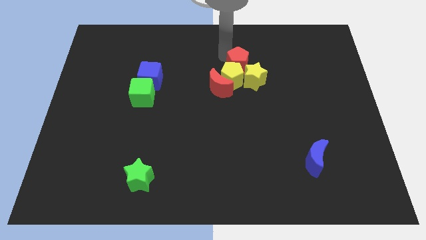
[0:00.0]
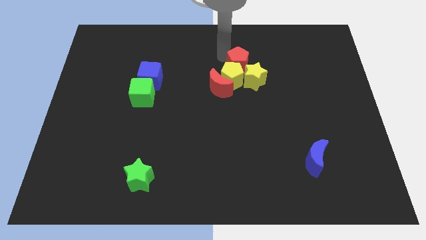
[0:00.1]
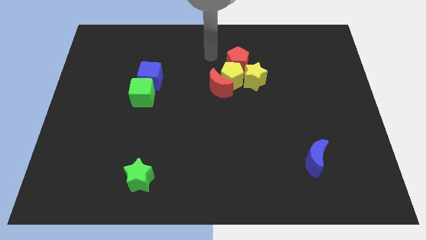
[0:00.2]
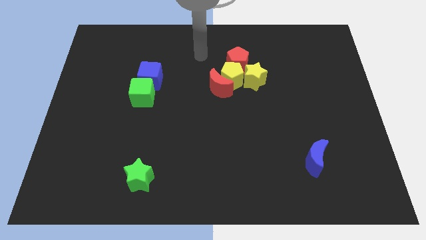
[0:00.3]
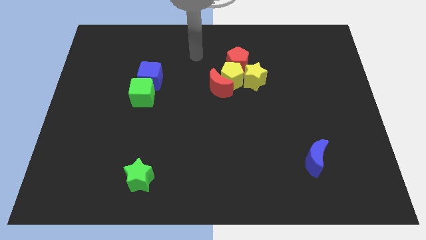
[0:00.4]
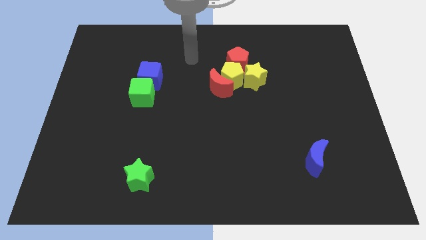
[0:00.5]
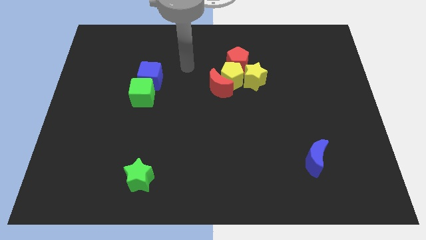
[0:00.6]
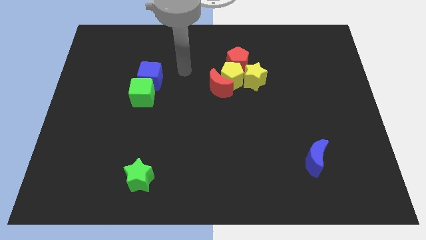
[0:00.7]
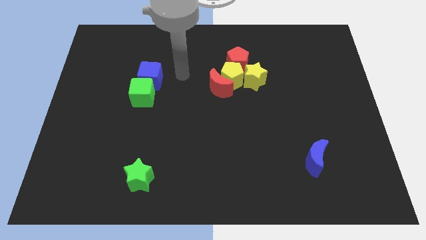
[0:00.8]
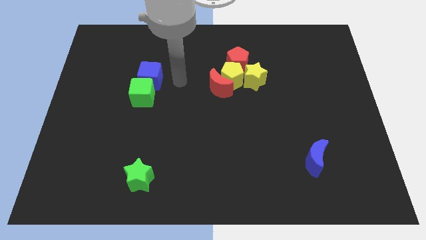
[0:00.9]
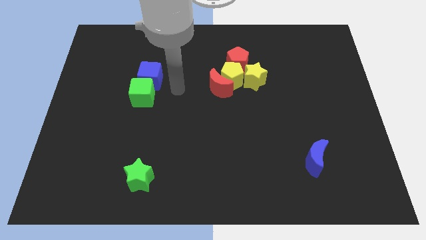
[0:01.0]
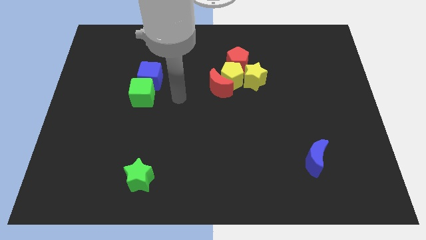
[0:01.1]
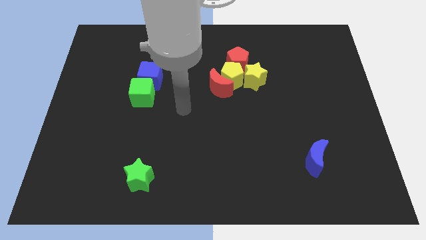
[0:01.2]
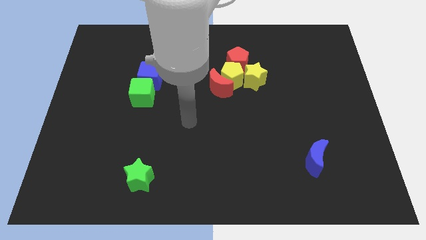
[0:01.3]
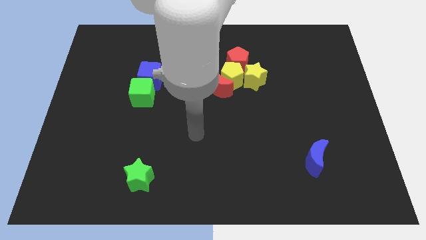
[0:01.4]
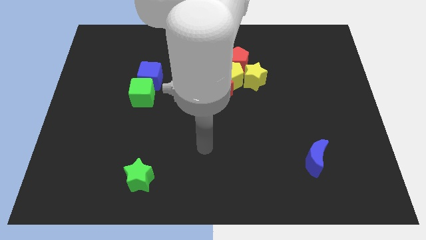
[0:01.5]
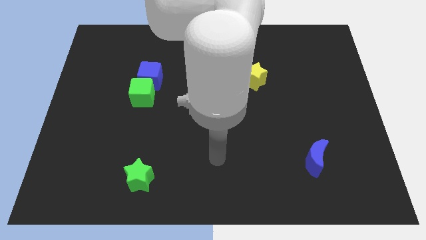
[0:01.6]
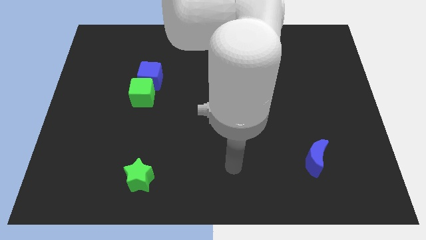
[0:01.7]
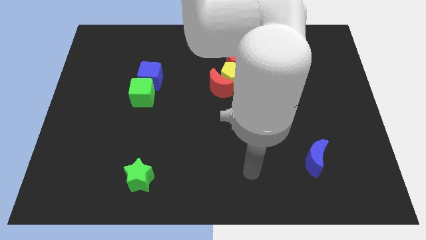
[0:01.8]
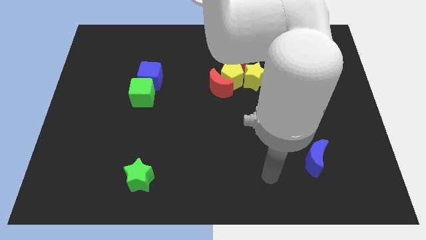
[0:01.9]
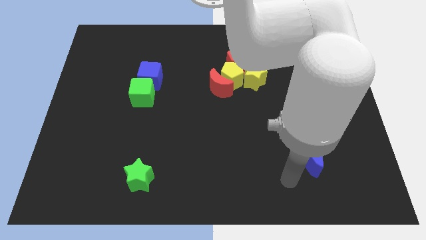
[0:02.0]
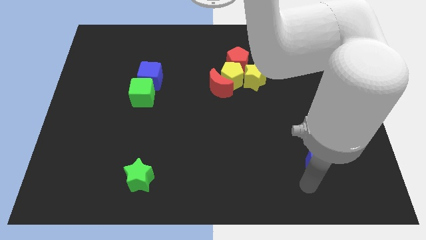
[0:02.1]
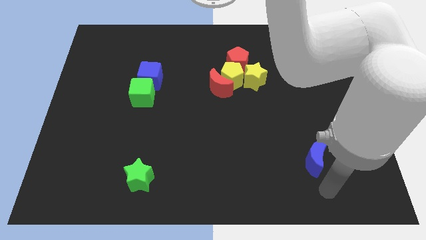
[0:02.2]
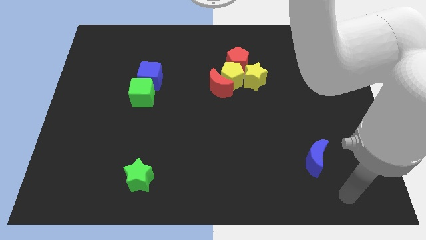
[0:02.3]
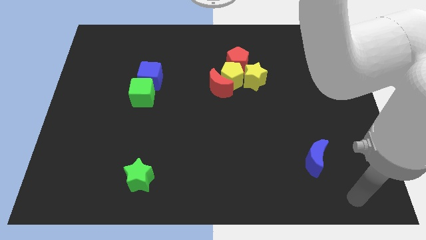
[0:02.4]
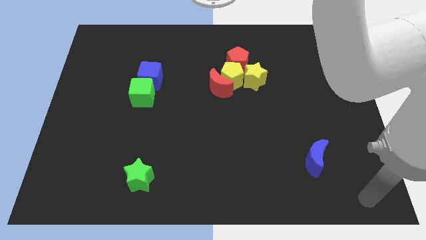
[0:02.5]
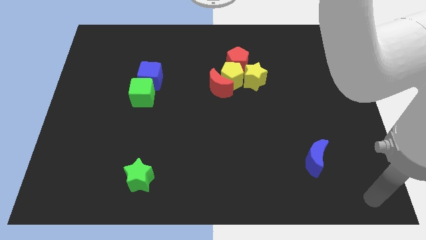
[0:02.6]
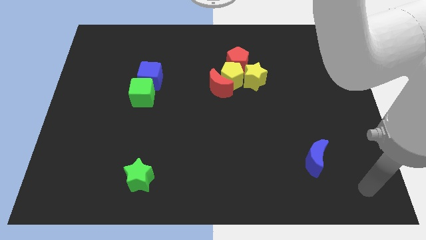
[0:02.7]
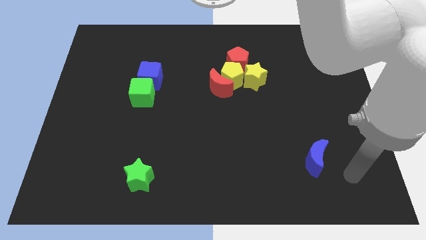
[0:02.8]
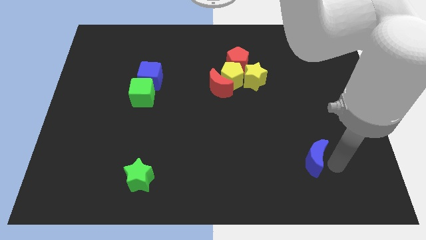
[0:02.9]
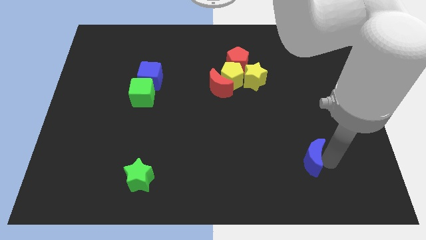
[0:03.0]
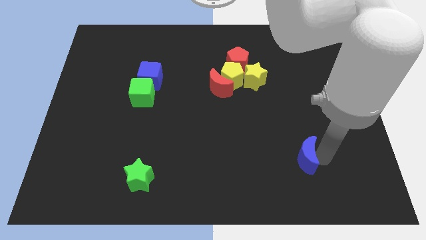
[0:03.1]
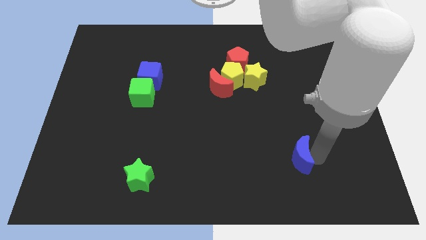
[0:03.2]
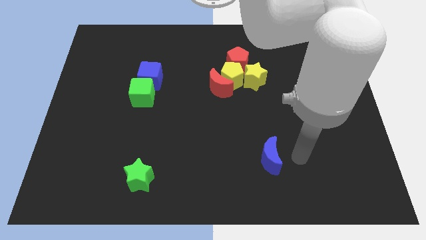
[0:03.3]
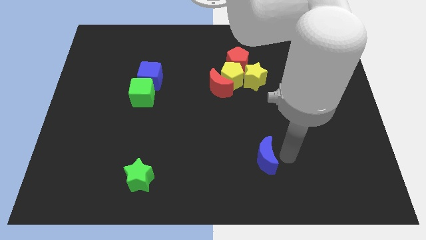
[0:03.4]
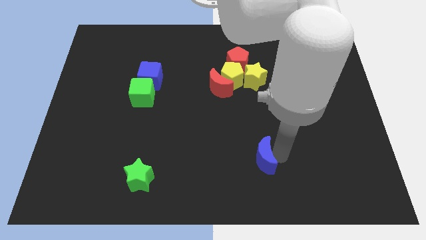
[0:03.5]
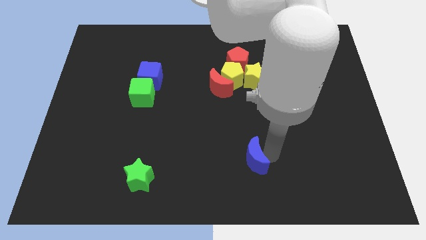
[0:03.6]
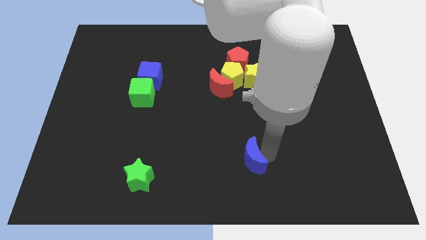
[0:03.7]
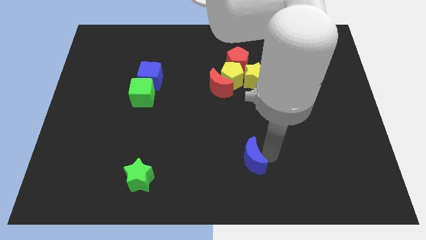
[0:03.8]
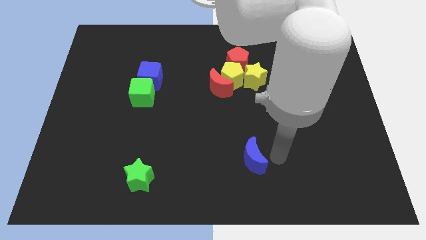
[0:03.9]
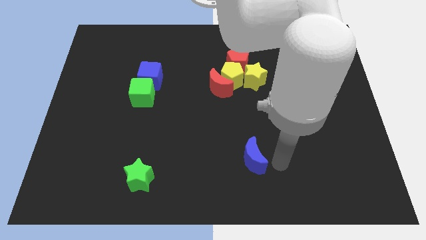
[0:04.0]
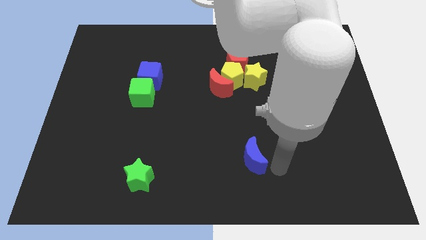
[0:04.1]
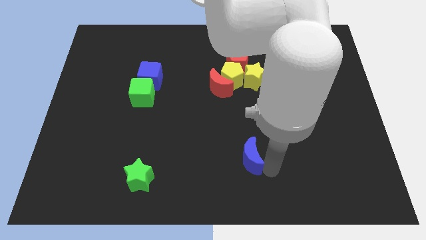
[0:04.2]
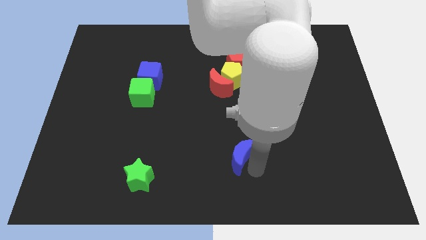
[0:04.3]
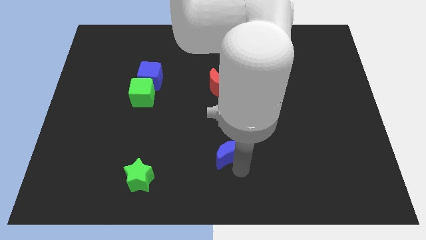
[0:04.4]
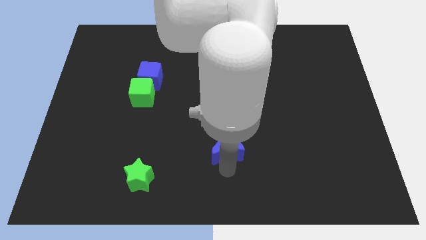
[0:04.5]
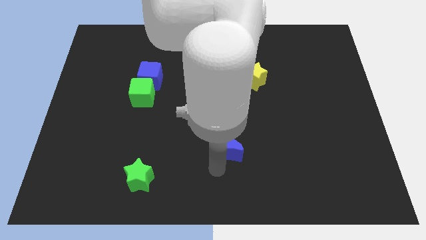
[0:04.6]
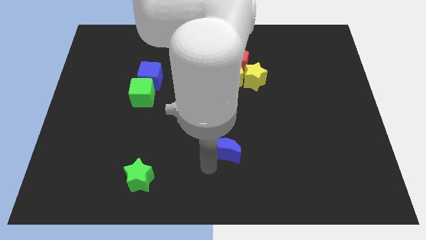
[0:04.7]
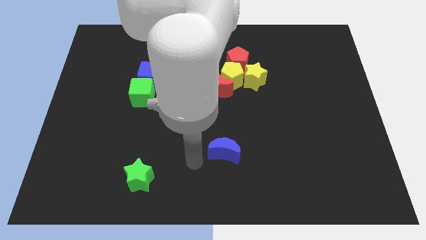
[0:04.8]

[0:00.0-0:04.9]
place the blue moon diagonal to the green star

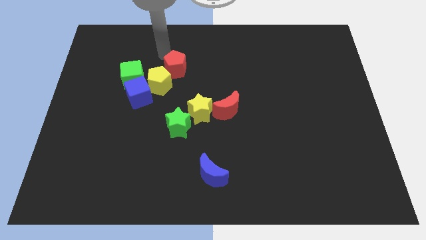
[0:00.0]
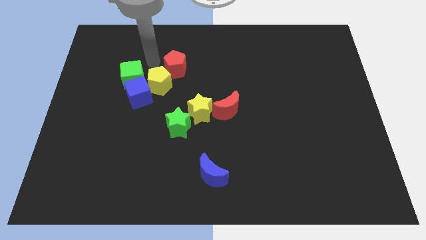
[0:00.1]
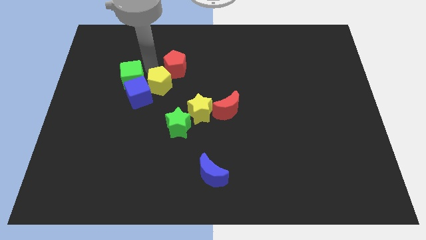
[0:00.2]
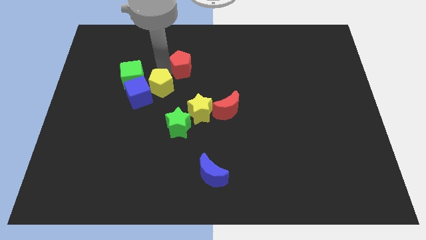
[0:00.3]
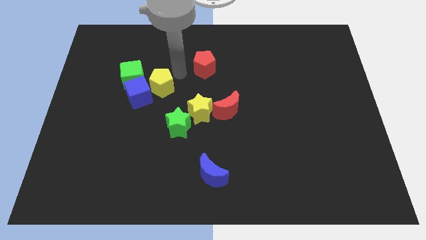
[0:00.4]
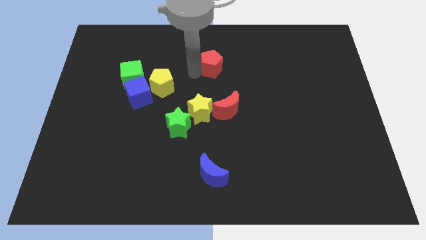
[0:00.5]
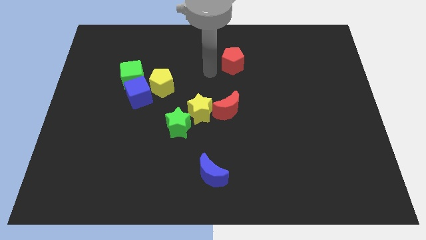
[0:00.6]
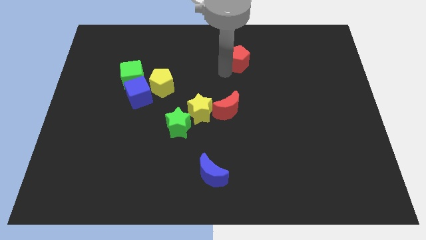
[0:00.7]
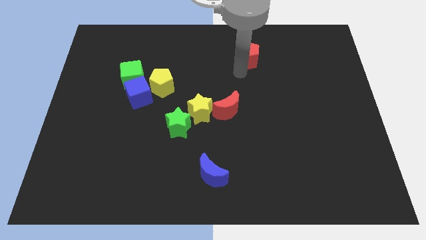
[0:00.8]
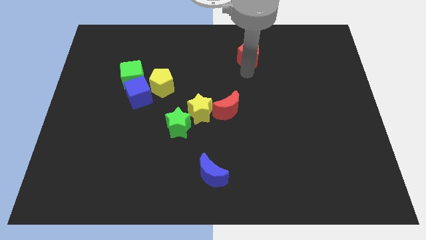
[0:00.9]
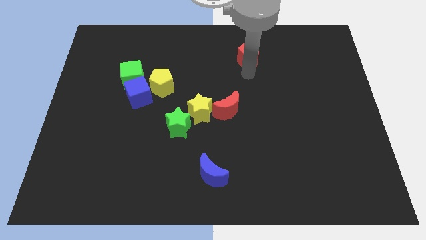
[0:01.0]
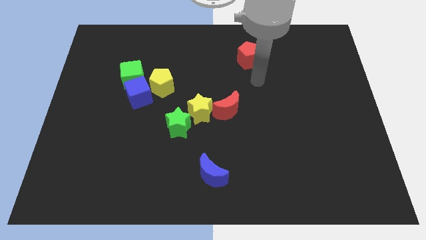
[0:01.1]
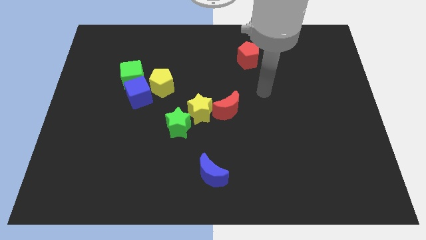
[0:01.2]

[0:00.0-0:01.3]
move the red pentagon away from the yellow pentagon

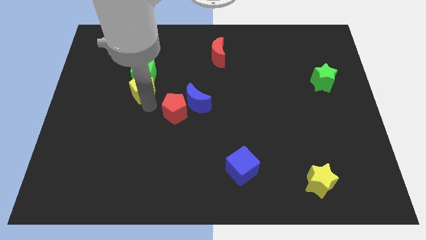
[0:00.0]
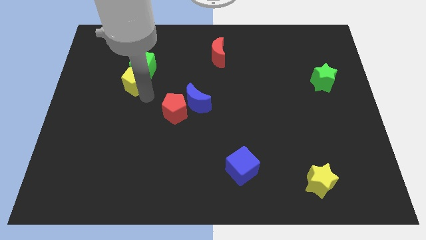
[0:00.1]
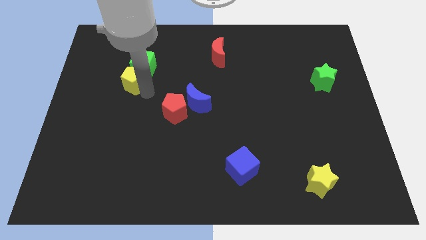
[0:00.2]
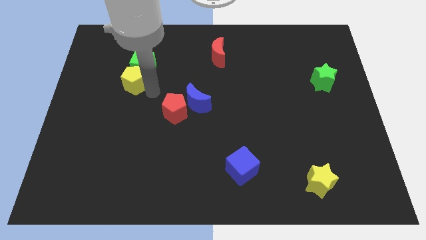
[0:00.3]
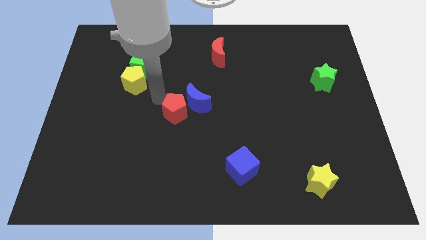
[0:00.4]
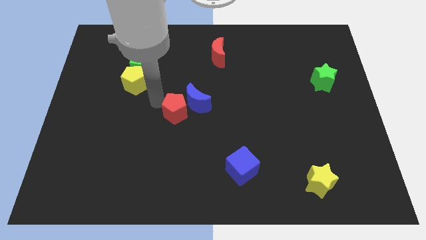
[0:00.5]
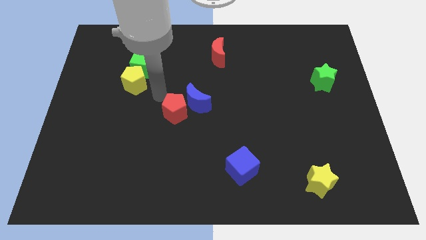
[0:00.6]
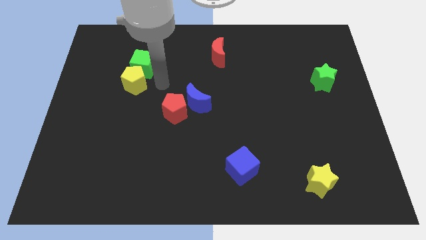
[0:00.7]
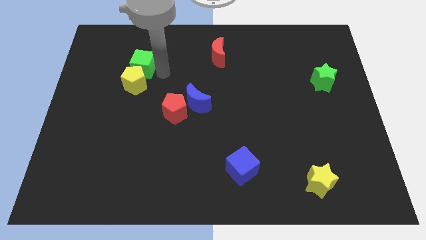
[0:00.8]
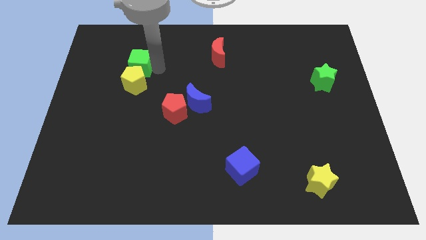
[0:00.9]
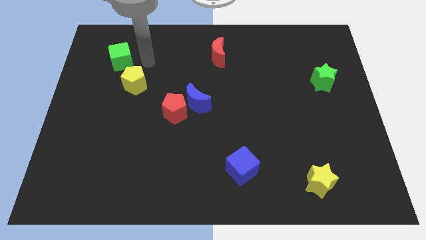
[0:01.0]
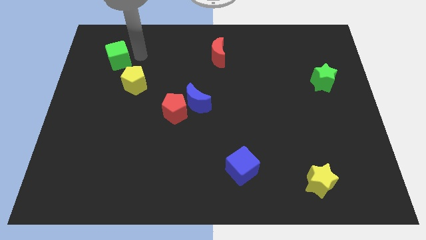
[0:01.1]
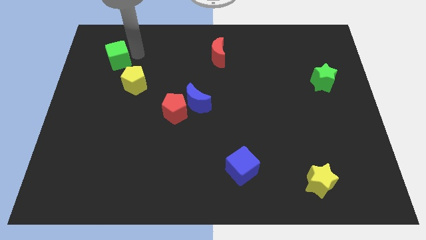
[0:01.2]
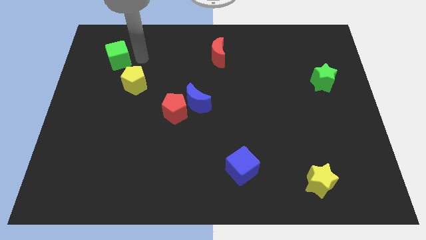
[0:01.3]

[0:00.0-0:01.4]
separate green cube from yellow pentagon

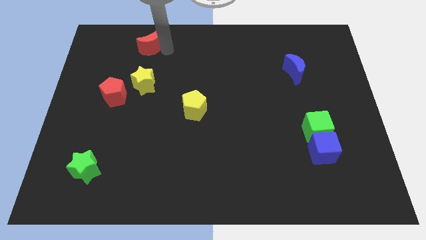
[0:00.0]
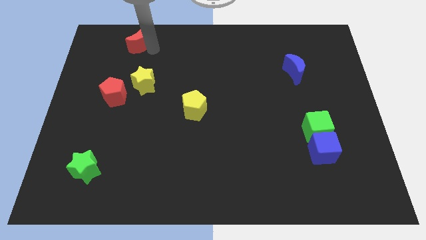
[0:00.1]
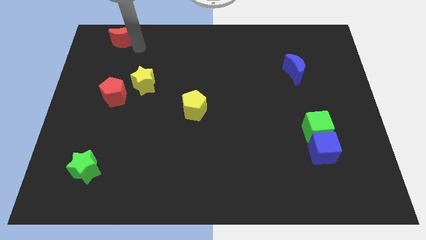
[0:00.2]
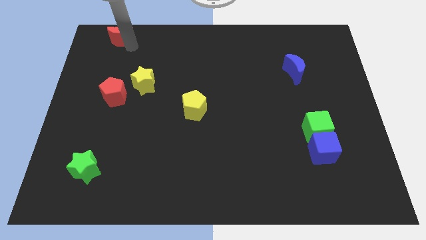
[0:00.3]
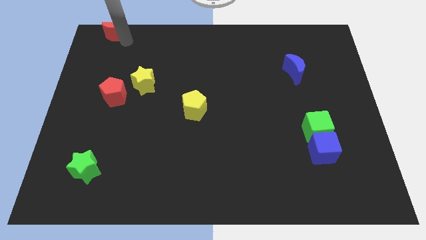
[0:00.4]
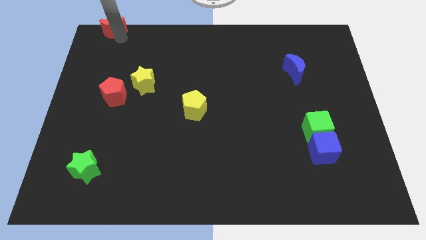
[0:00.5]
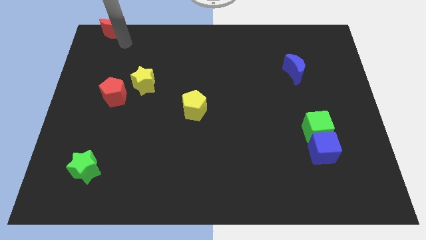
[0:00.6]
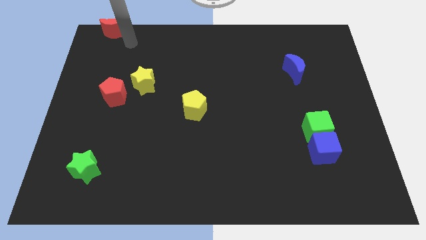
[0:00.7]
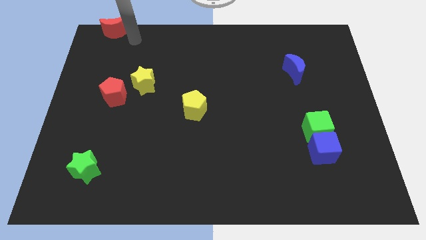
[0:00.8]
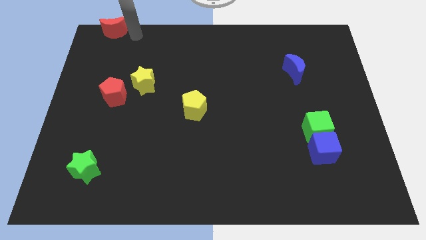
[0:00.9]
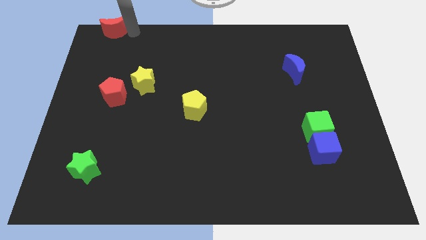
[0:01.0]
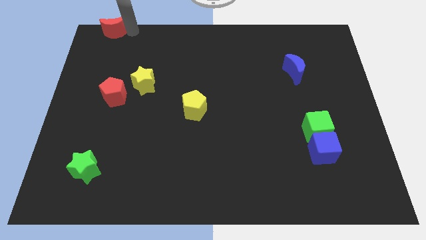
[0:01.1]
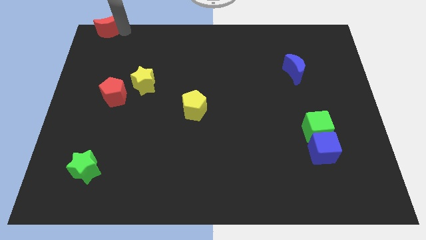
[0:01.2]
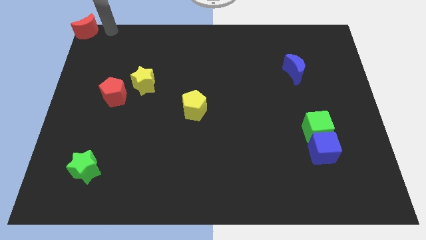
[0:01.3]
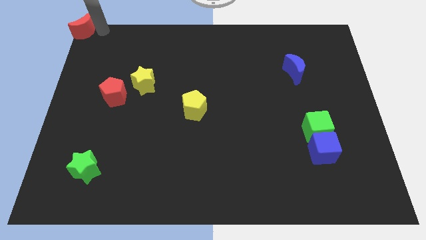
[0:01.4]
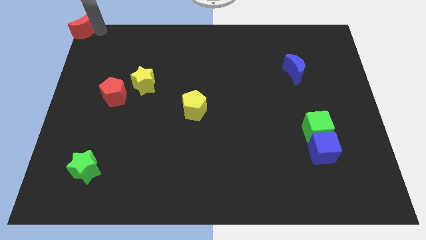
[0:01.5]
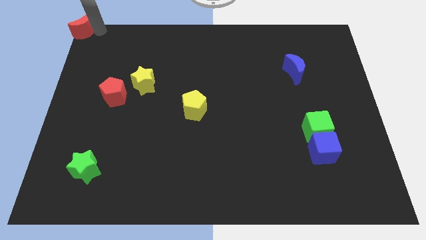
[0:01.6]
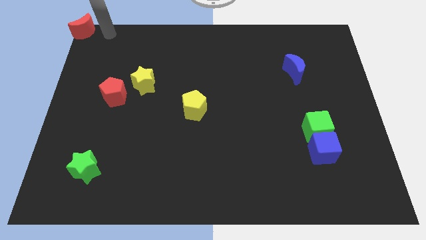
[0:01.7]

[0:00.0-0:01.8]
place the red crescent to the top left of the board
